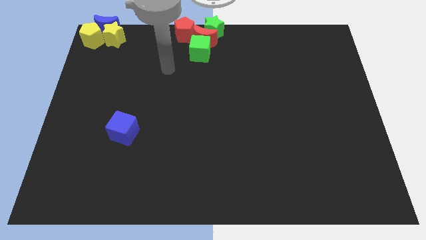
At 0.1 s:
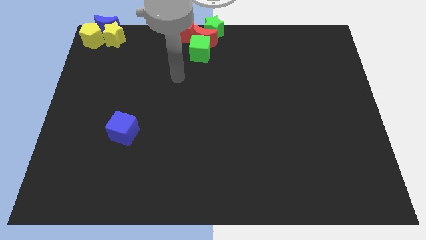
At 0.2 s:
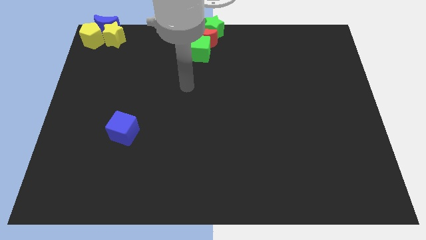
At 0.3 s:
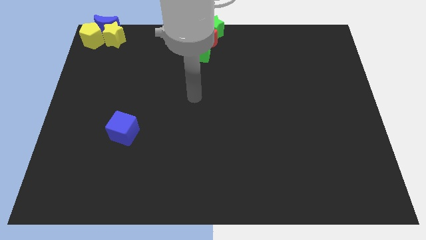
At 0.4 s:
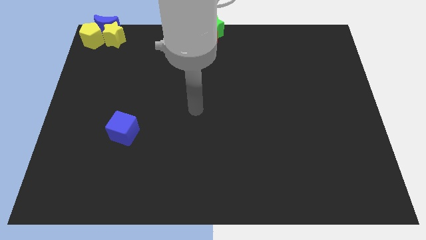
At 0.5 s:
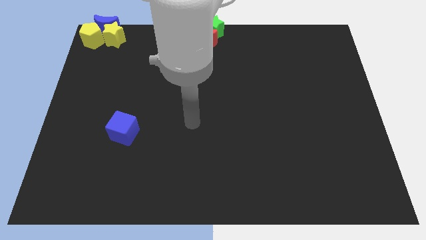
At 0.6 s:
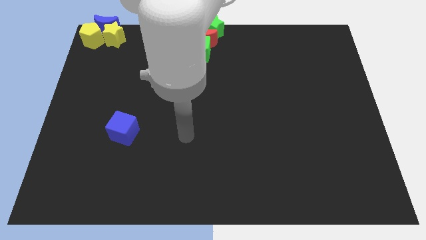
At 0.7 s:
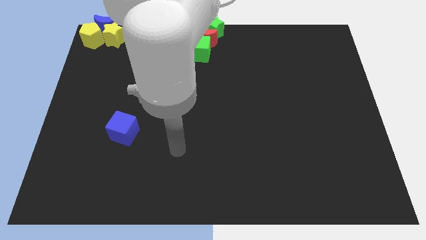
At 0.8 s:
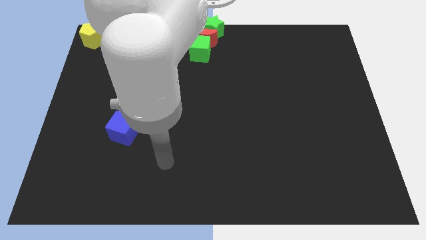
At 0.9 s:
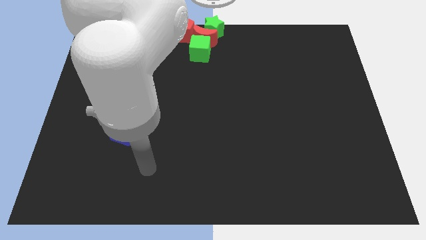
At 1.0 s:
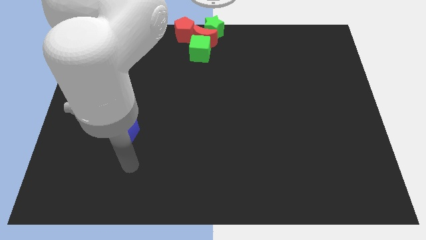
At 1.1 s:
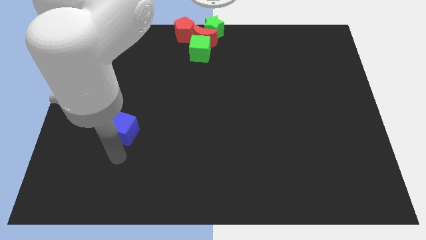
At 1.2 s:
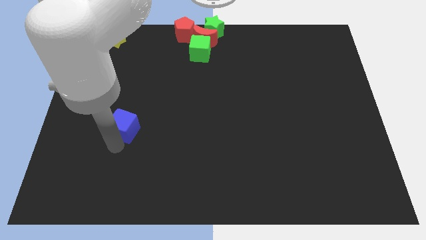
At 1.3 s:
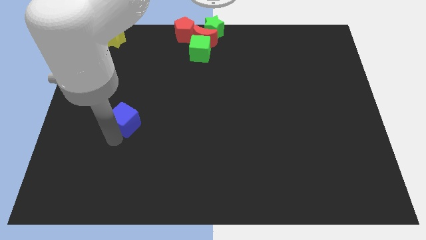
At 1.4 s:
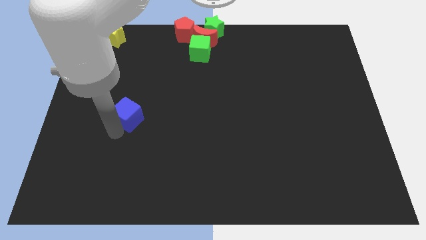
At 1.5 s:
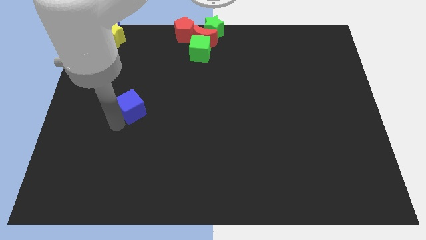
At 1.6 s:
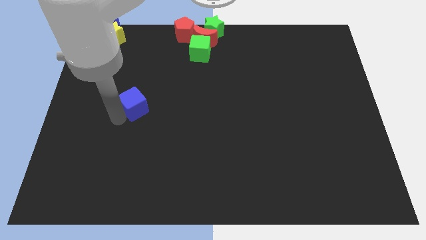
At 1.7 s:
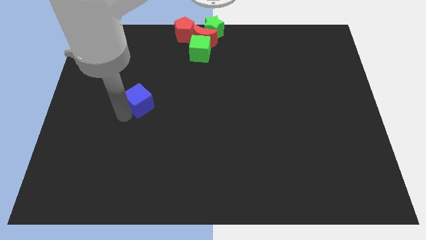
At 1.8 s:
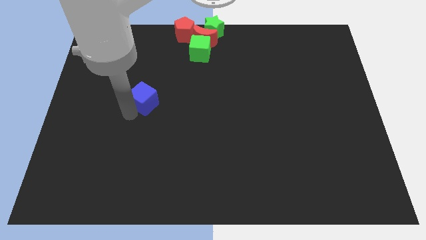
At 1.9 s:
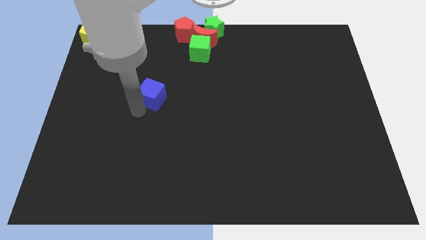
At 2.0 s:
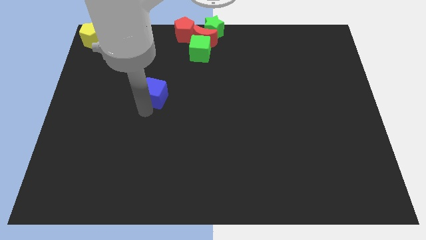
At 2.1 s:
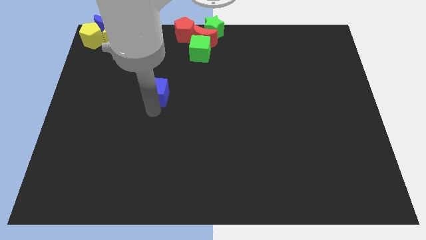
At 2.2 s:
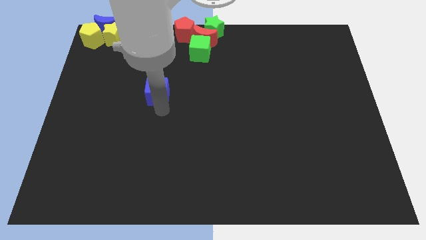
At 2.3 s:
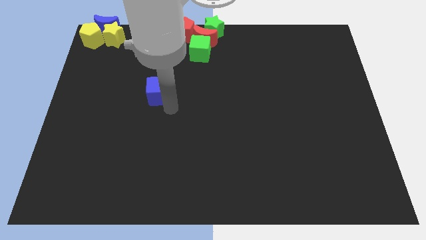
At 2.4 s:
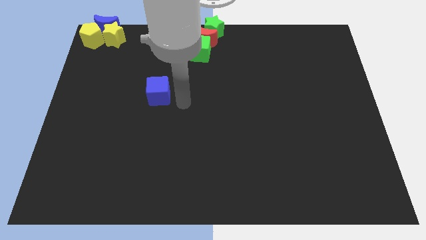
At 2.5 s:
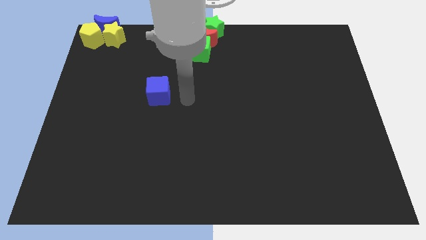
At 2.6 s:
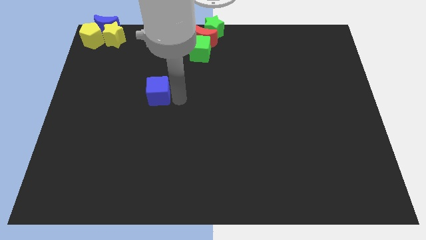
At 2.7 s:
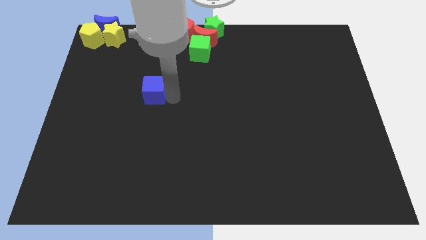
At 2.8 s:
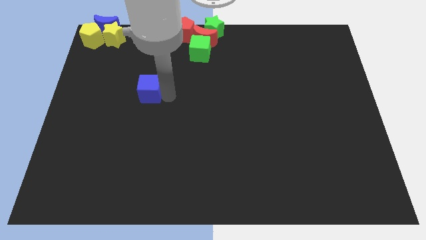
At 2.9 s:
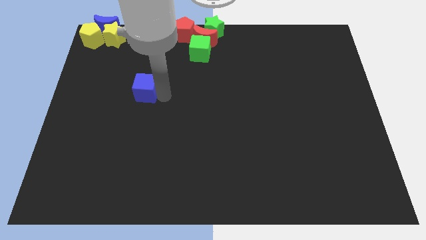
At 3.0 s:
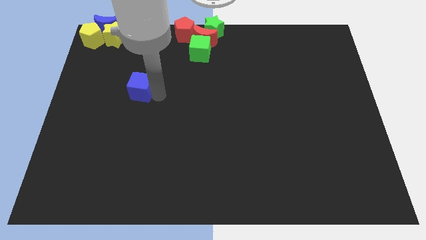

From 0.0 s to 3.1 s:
move the blue cube towards the top left

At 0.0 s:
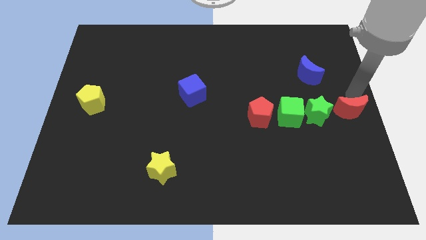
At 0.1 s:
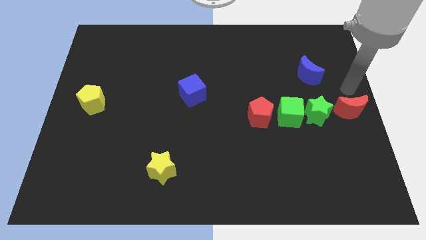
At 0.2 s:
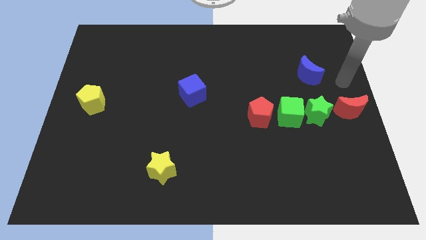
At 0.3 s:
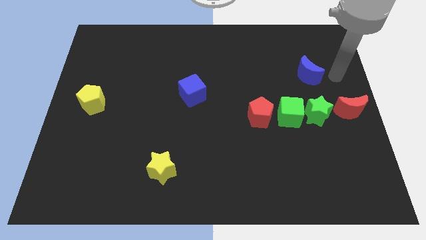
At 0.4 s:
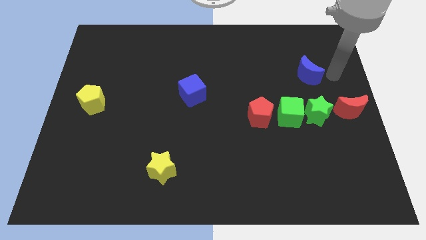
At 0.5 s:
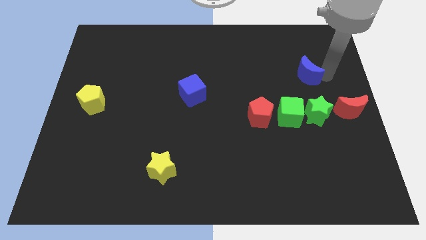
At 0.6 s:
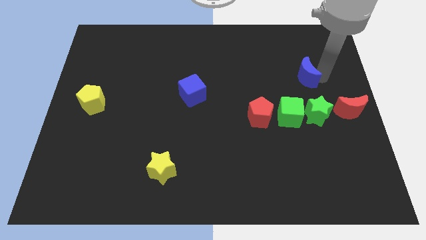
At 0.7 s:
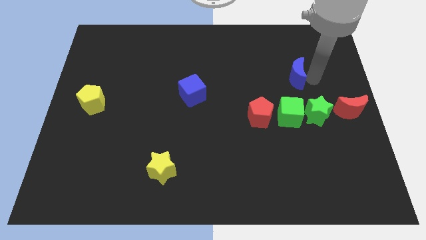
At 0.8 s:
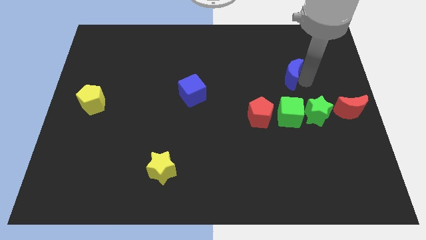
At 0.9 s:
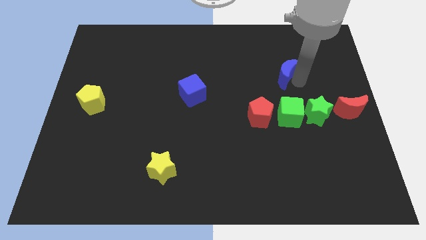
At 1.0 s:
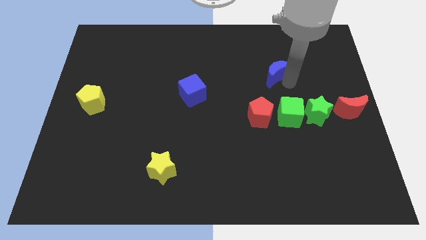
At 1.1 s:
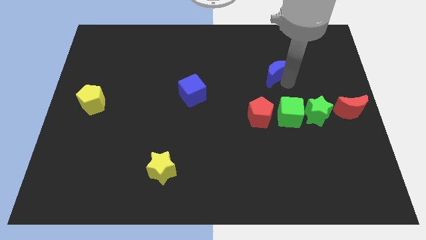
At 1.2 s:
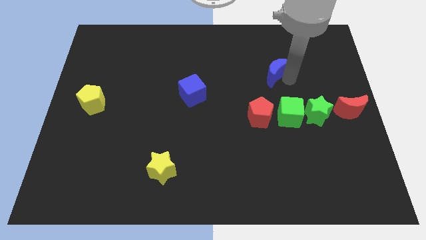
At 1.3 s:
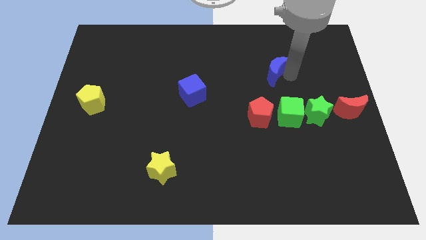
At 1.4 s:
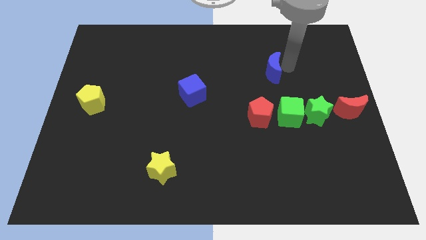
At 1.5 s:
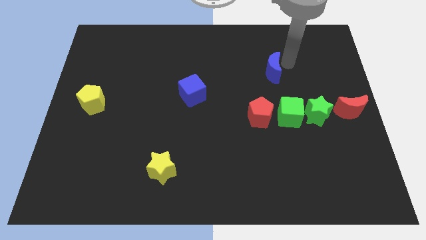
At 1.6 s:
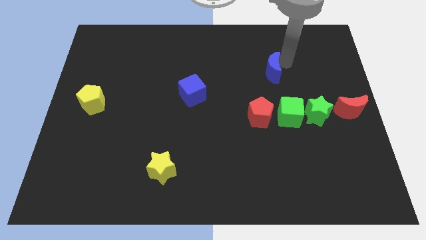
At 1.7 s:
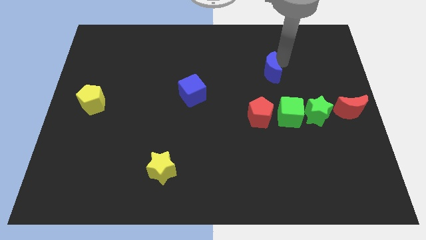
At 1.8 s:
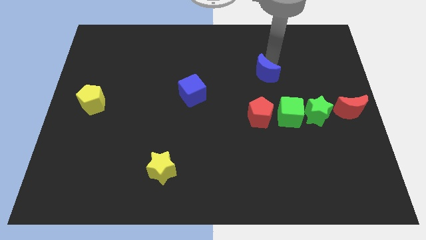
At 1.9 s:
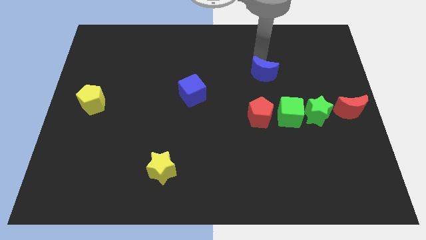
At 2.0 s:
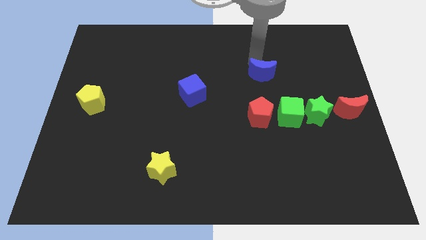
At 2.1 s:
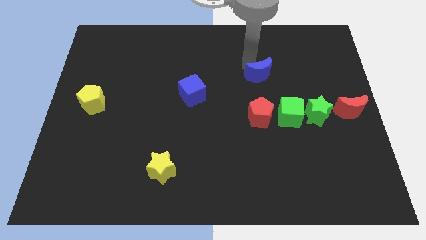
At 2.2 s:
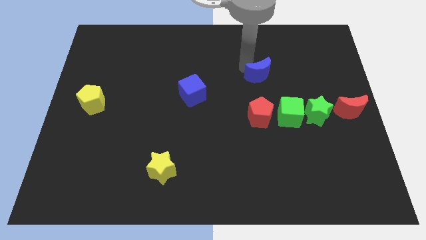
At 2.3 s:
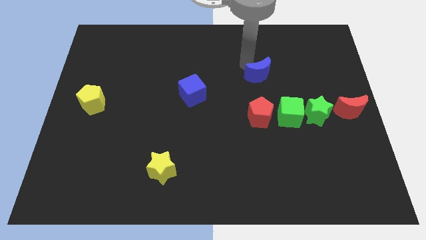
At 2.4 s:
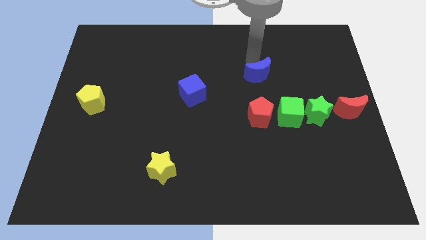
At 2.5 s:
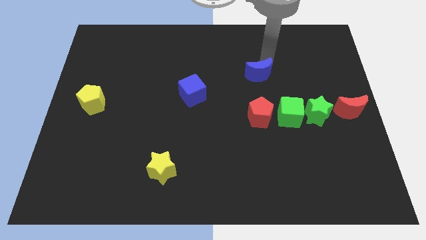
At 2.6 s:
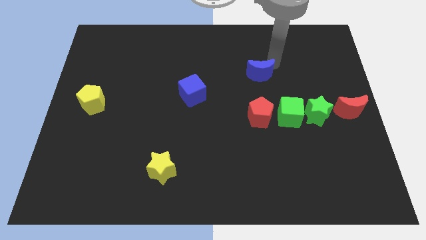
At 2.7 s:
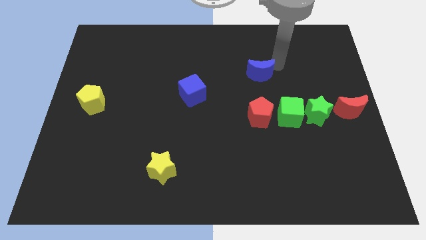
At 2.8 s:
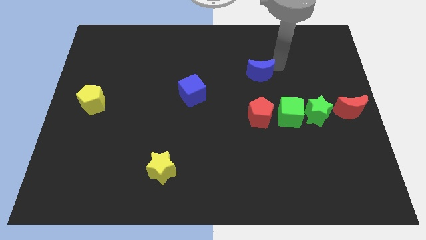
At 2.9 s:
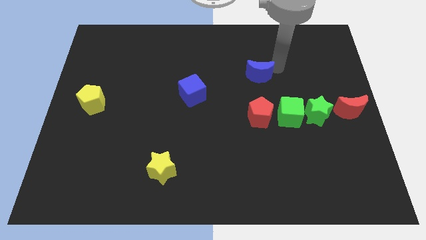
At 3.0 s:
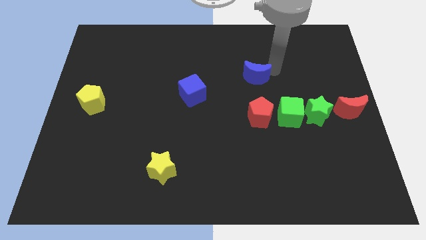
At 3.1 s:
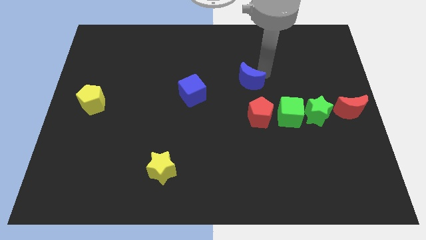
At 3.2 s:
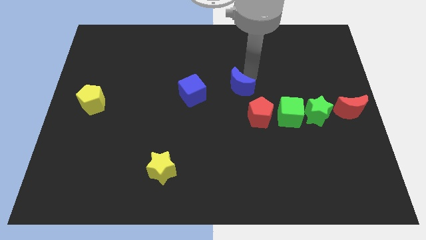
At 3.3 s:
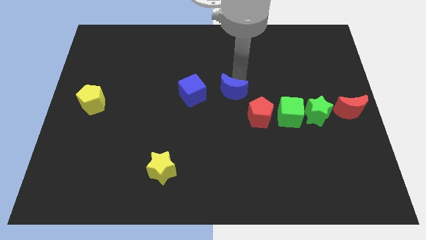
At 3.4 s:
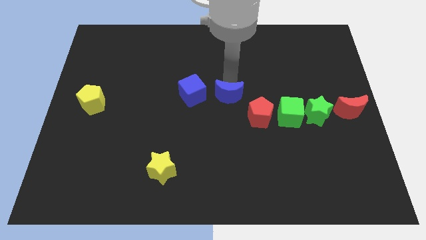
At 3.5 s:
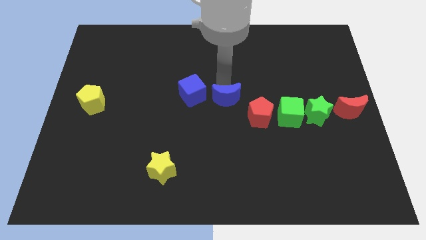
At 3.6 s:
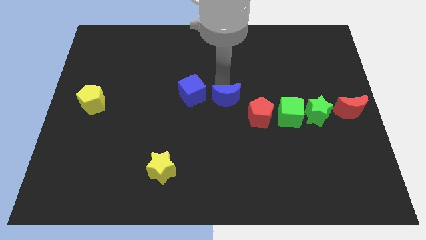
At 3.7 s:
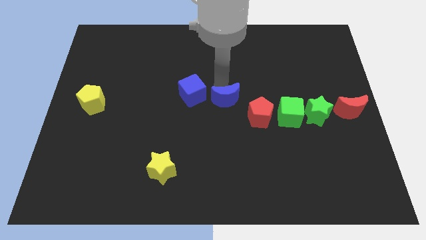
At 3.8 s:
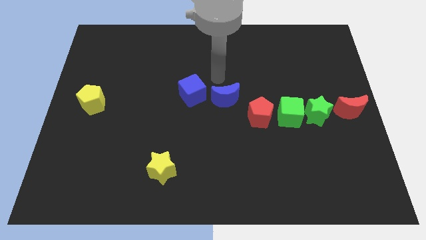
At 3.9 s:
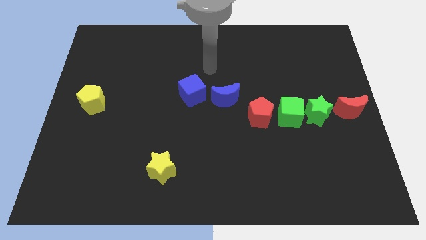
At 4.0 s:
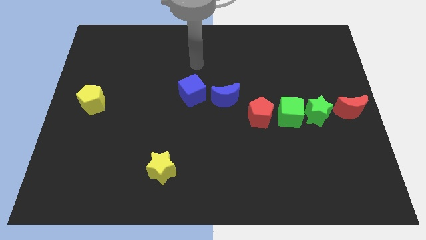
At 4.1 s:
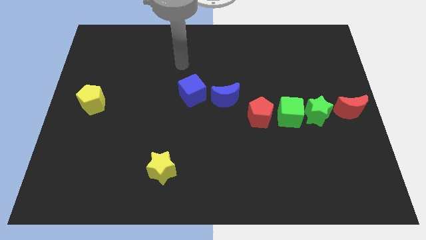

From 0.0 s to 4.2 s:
push the blue crescent to the right of the blue cube

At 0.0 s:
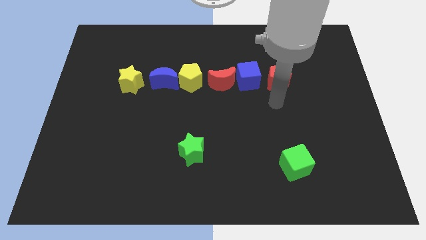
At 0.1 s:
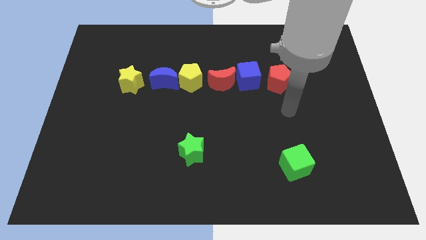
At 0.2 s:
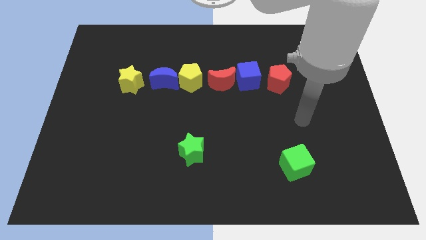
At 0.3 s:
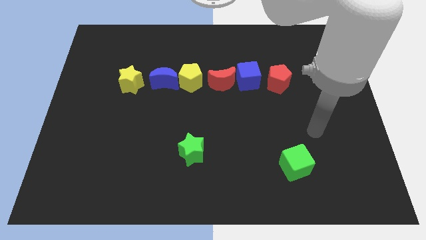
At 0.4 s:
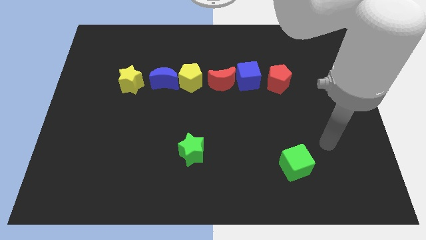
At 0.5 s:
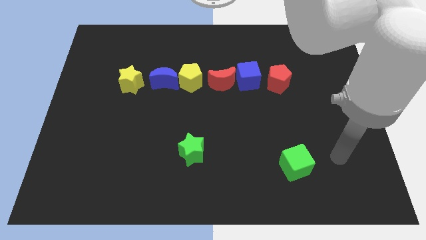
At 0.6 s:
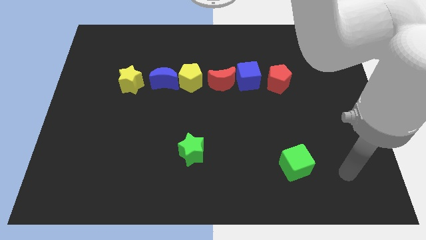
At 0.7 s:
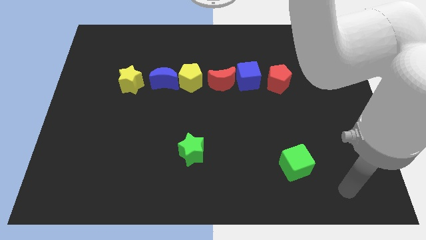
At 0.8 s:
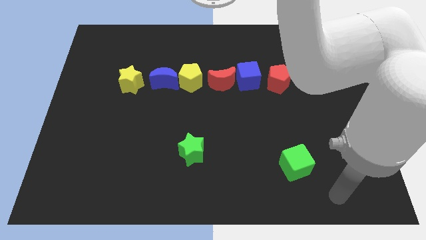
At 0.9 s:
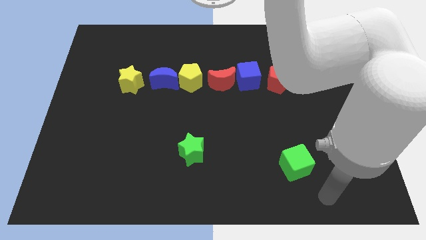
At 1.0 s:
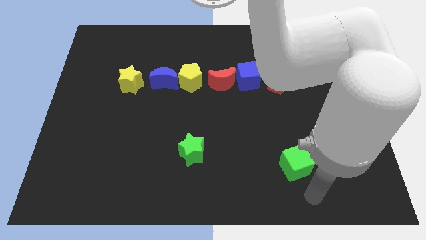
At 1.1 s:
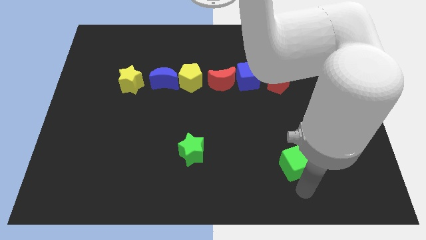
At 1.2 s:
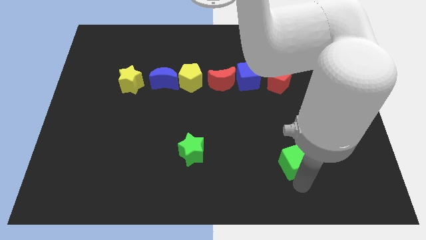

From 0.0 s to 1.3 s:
place your arm to the bottom of the green cube

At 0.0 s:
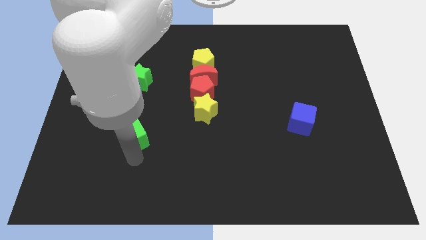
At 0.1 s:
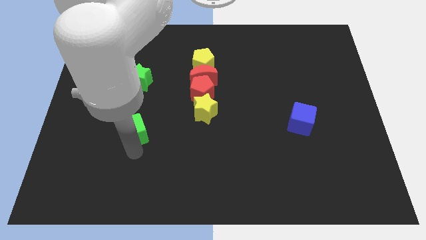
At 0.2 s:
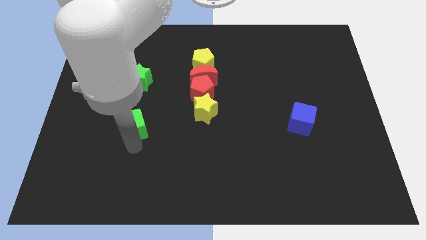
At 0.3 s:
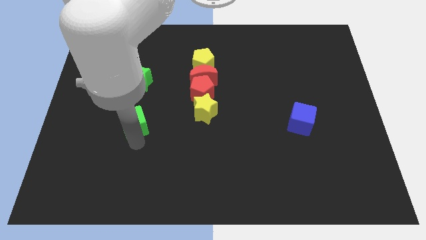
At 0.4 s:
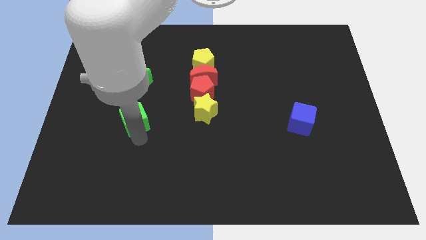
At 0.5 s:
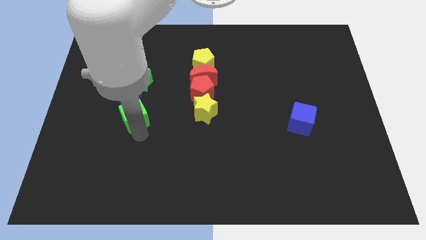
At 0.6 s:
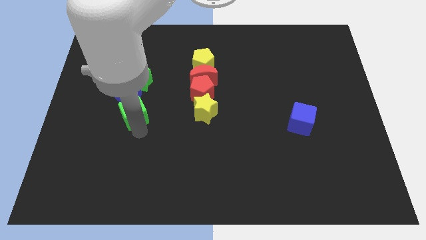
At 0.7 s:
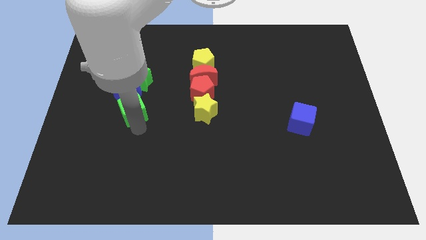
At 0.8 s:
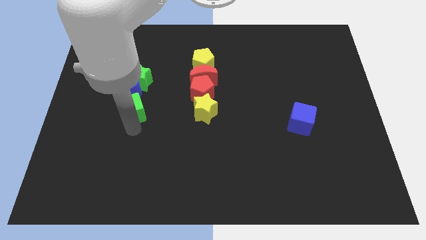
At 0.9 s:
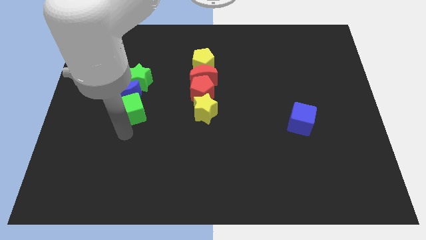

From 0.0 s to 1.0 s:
place the green cube below the blue crescent
